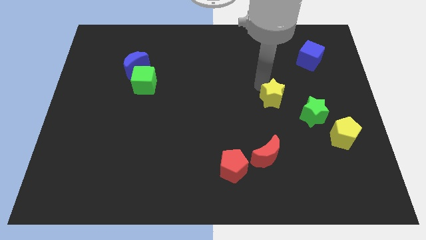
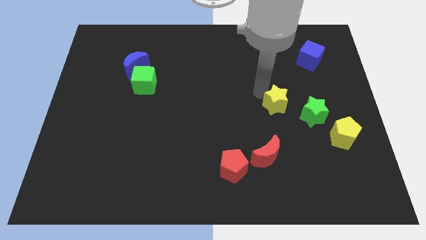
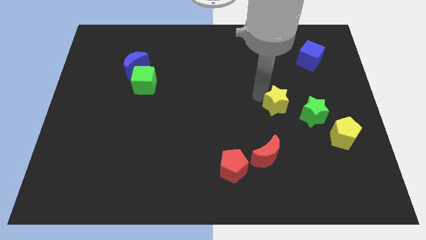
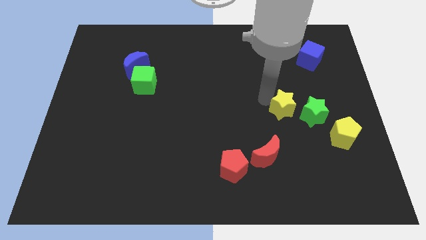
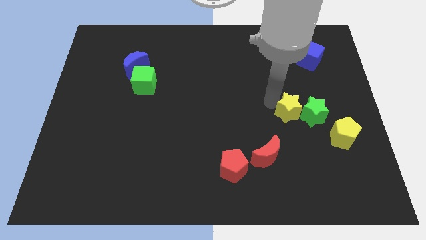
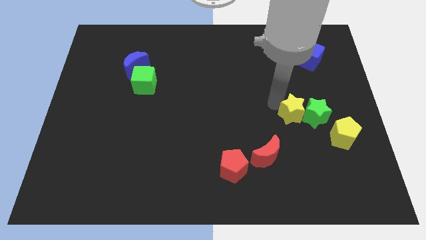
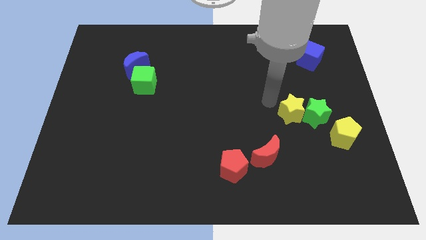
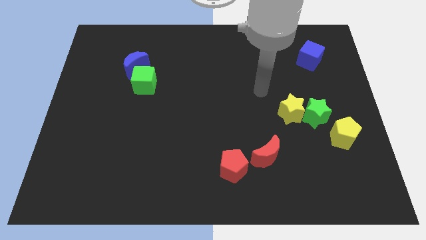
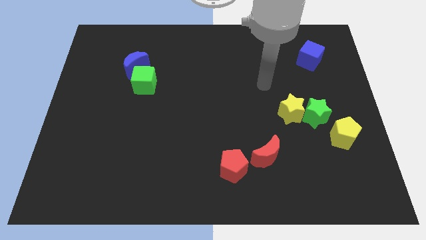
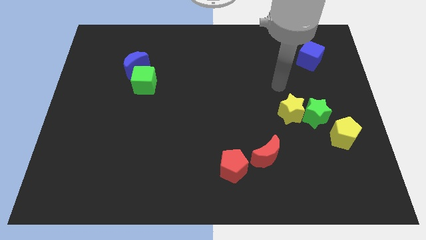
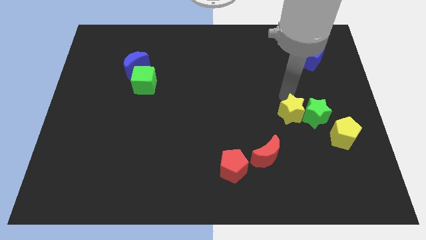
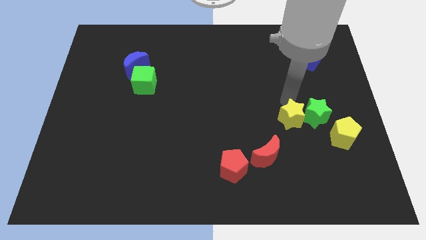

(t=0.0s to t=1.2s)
push yellow star in to green star

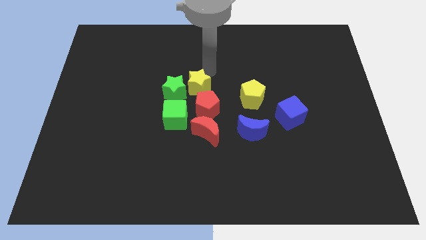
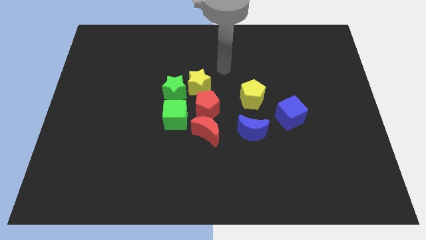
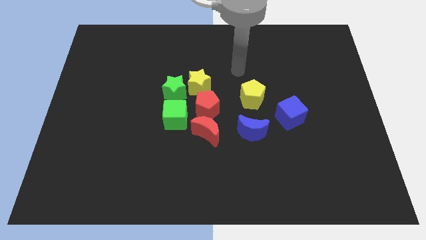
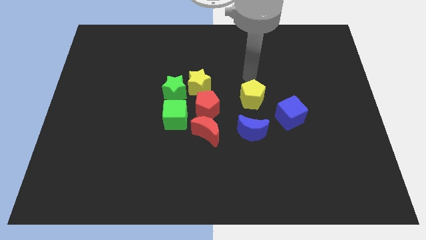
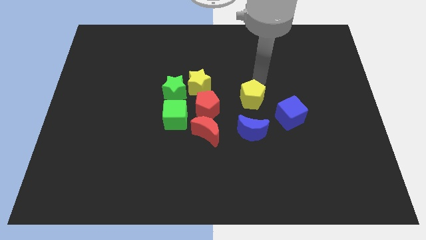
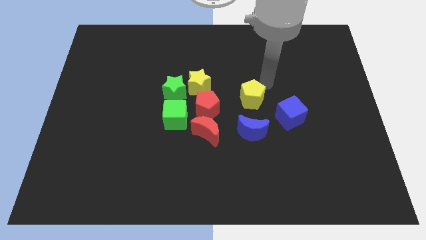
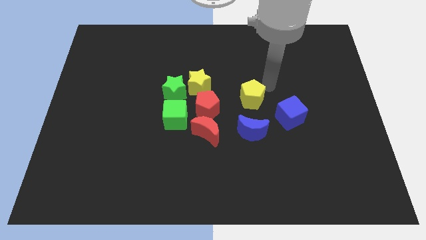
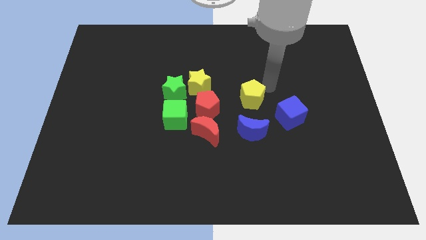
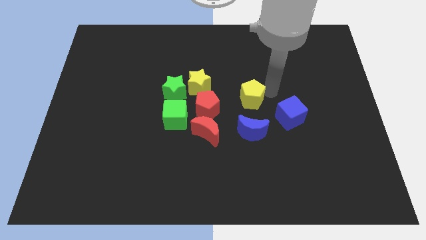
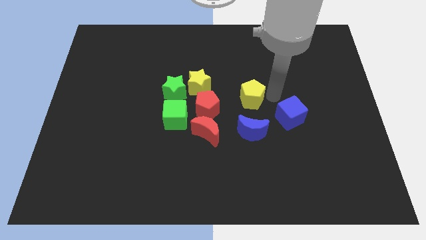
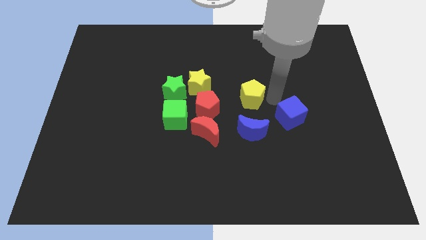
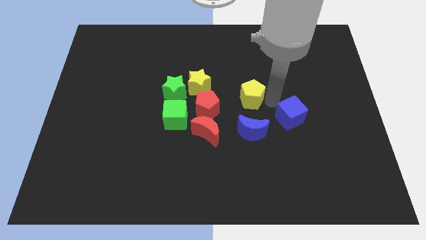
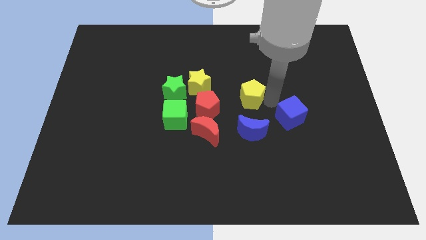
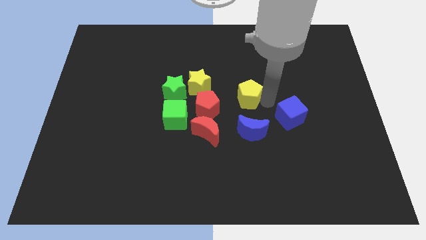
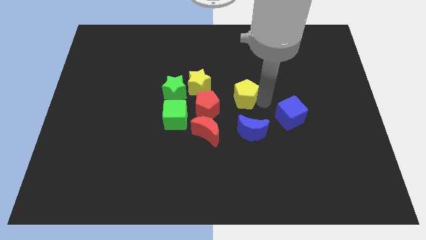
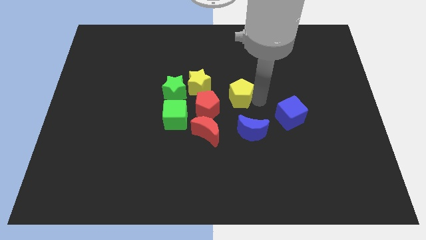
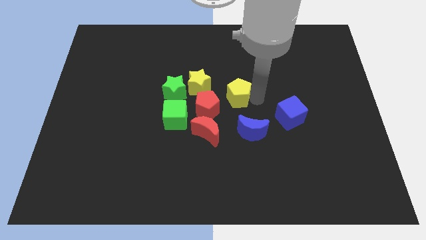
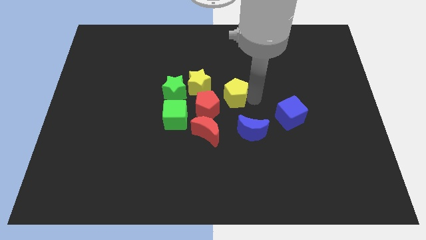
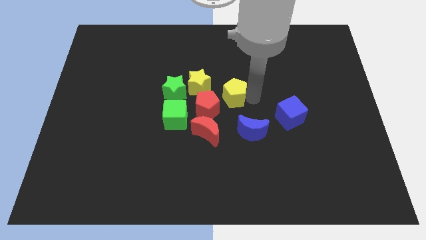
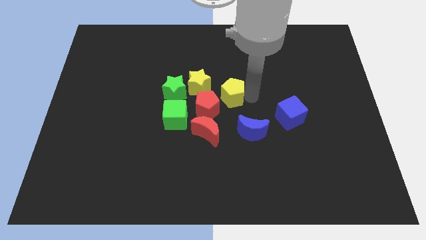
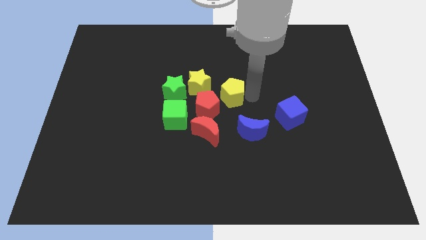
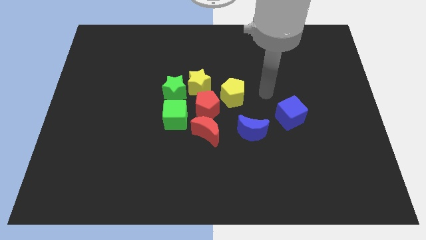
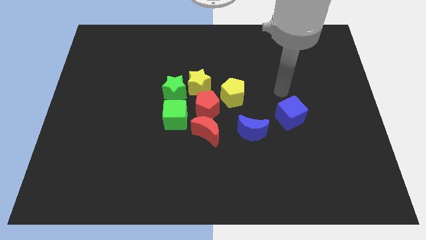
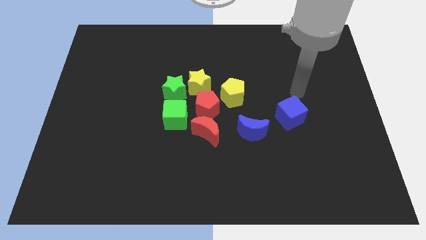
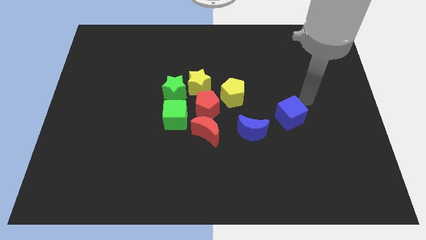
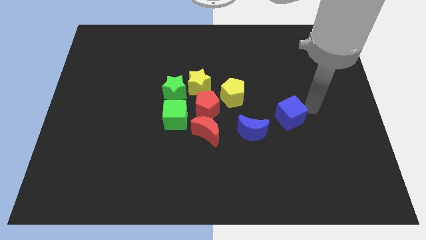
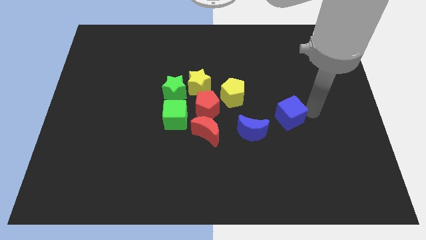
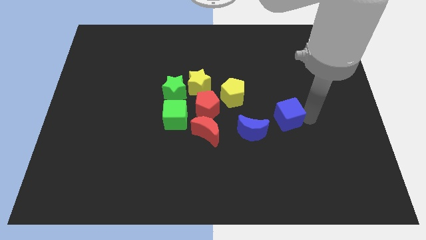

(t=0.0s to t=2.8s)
push the yellow pentagon close to the red pentagon

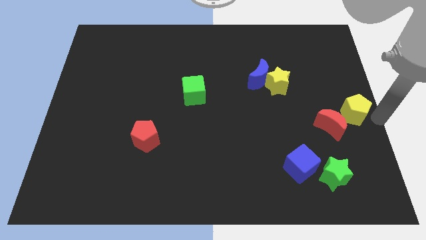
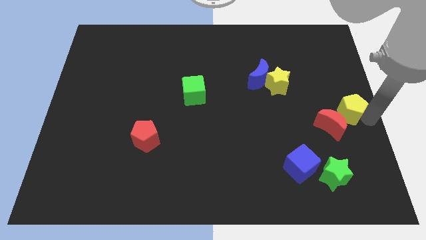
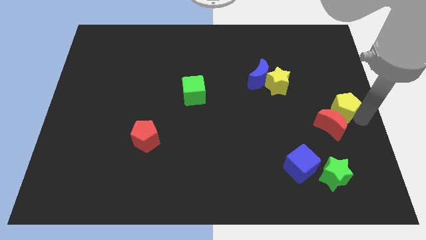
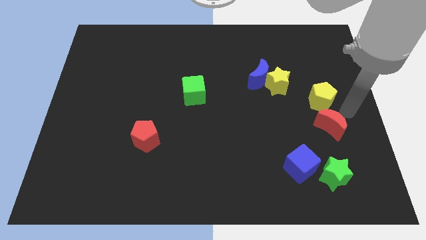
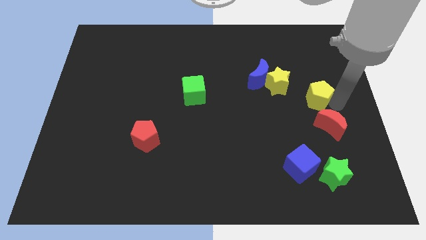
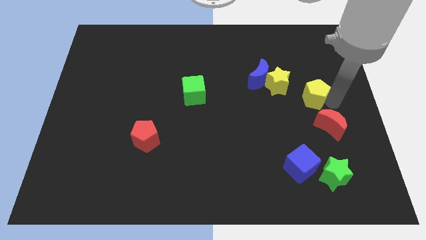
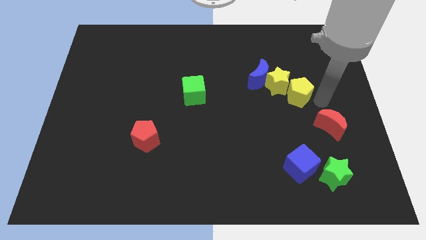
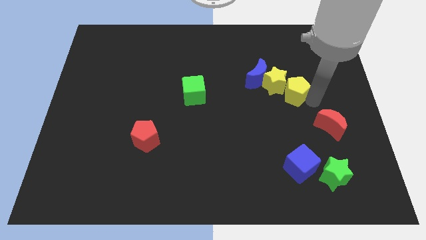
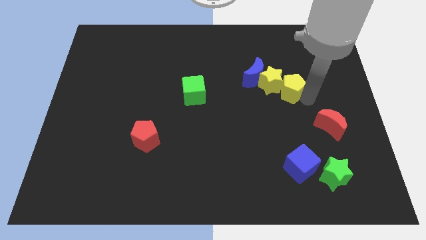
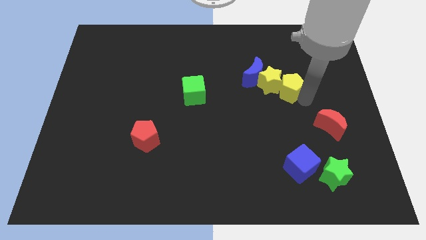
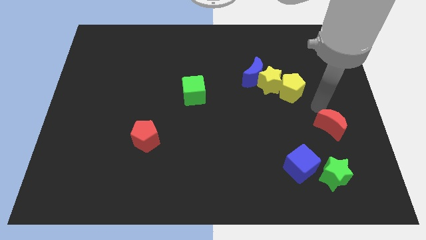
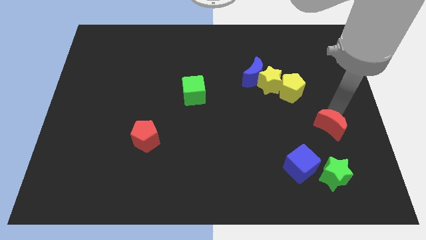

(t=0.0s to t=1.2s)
move the yellow pentagon into the yellow star

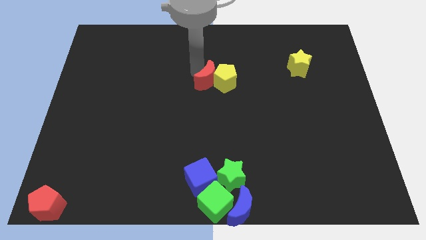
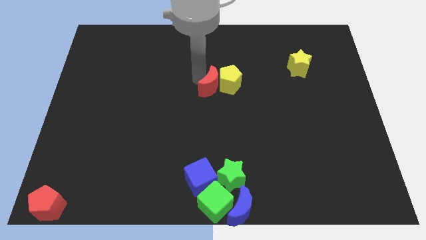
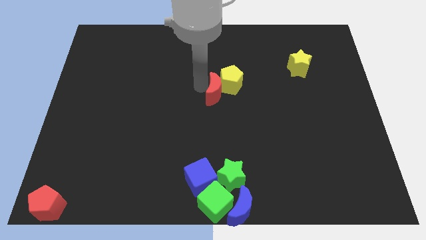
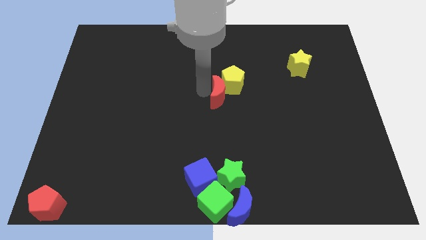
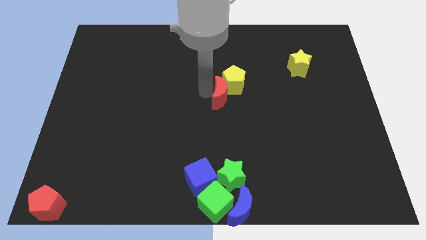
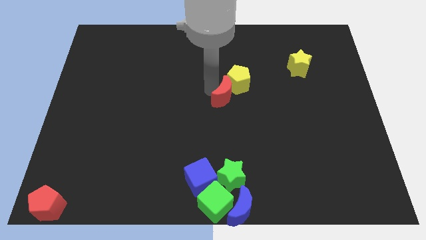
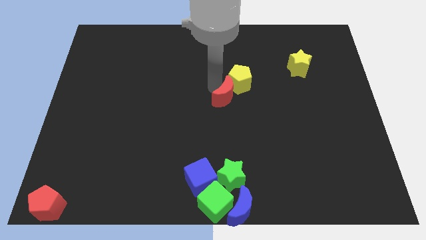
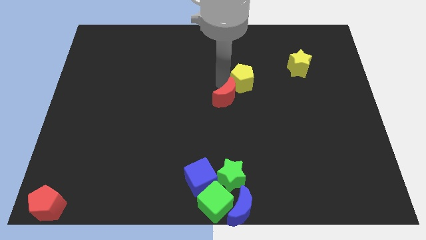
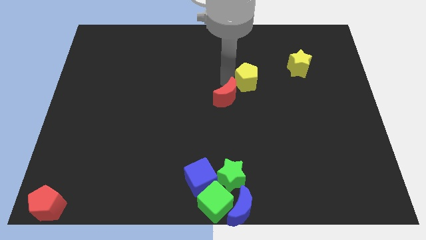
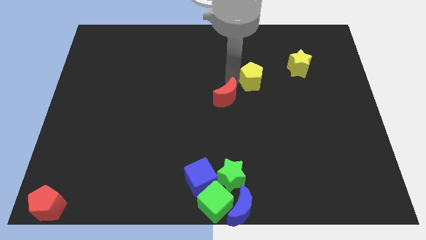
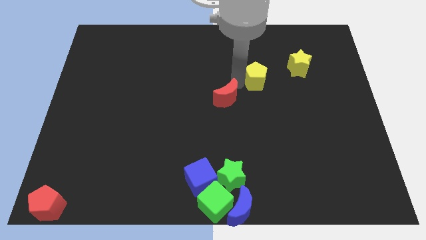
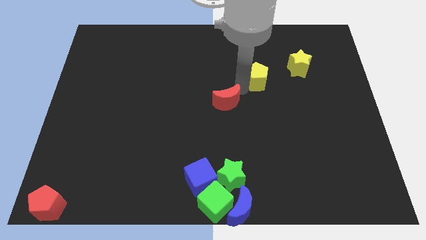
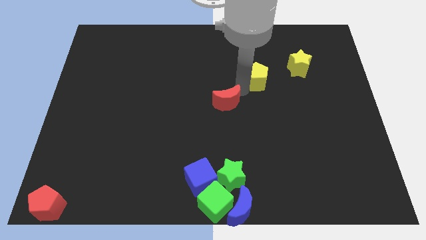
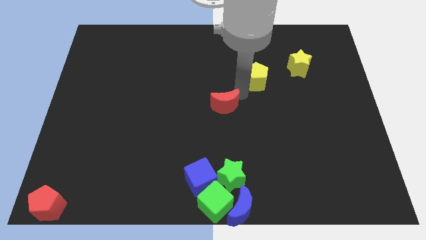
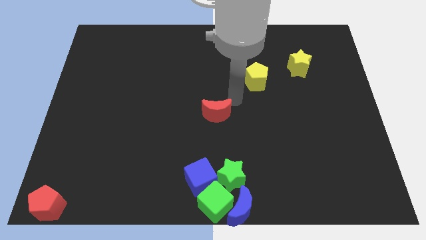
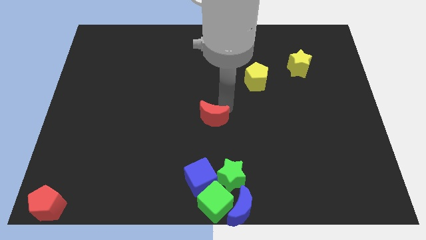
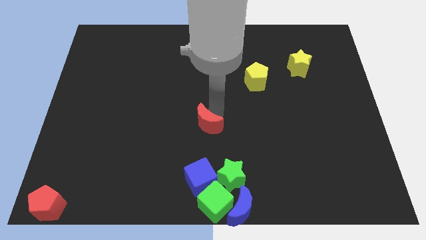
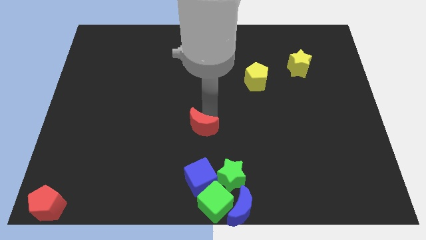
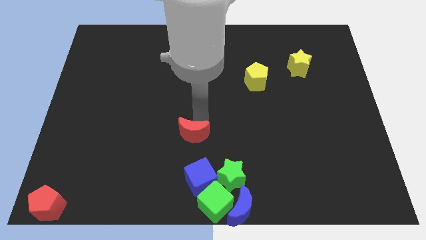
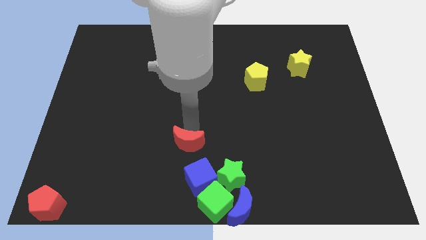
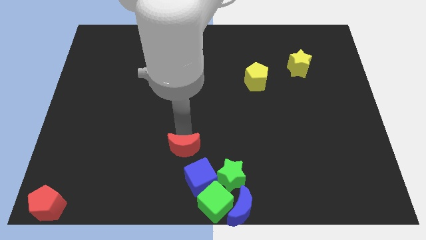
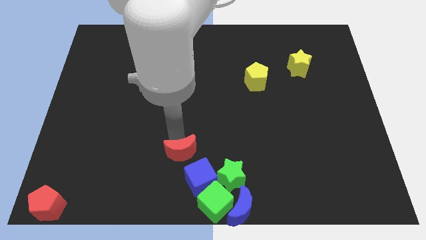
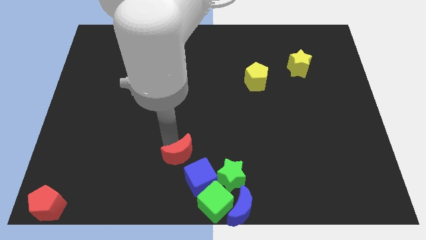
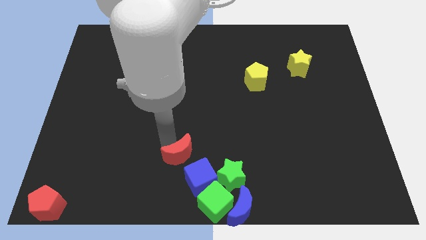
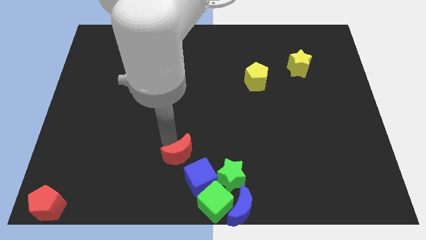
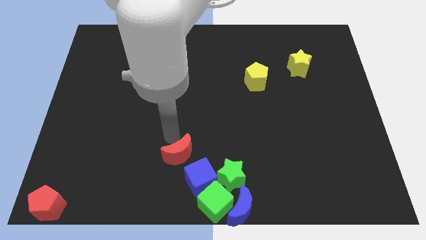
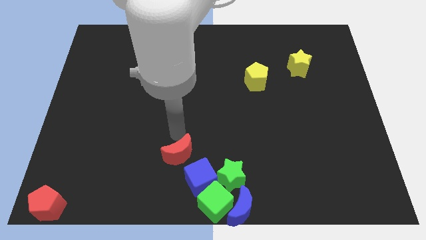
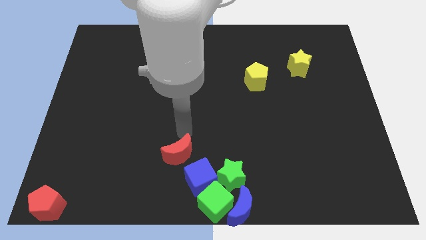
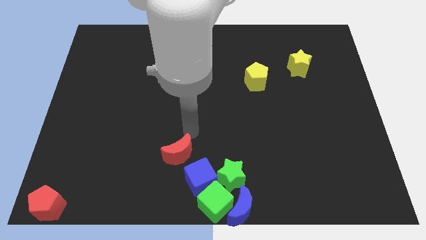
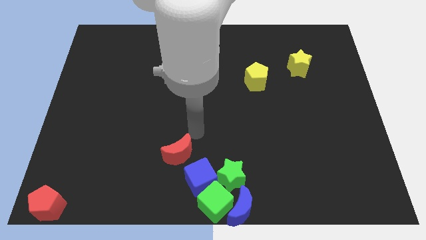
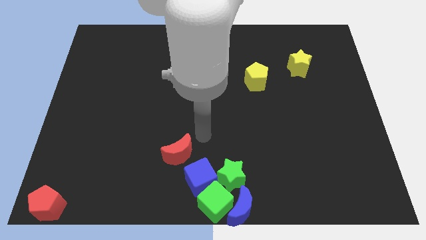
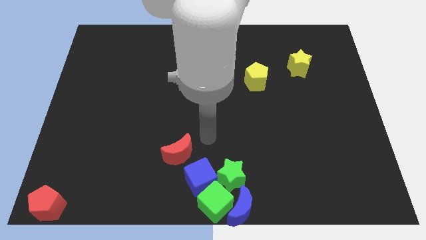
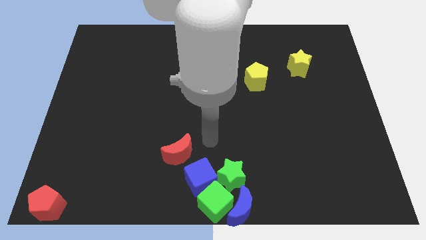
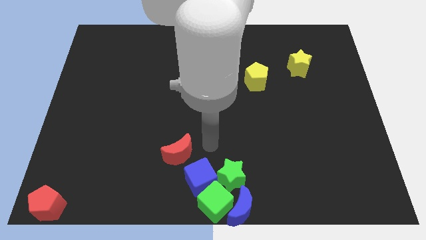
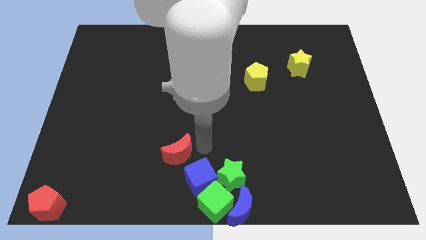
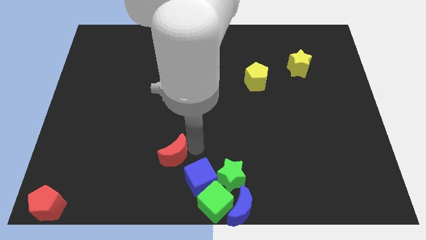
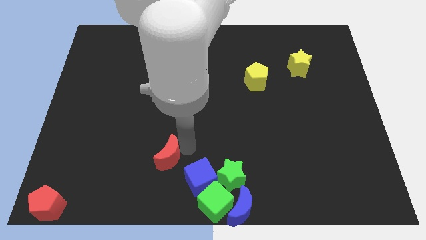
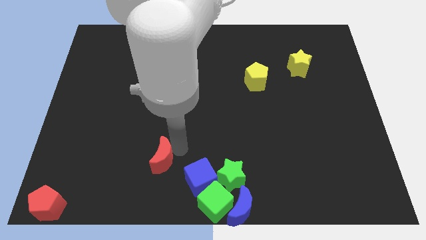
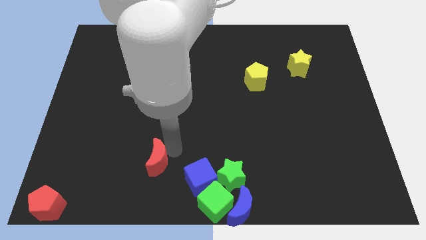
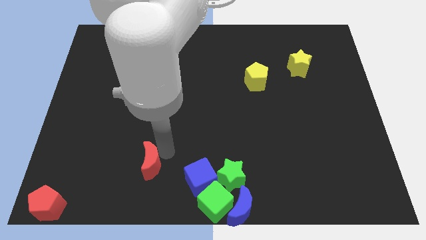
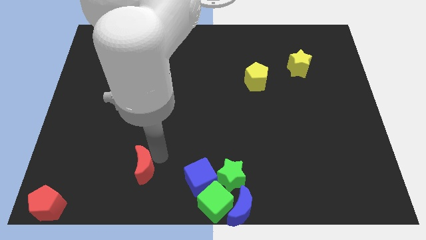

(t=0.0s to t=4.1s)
slide red pentagon to top left of blue cube
